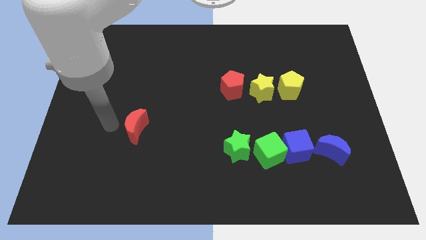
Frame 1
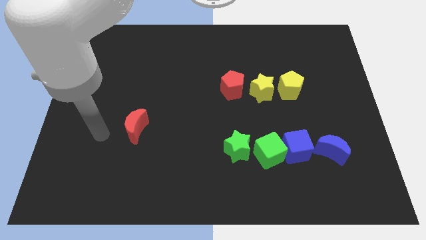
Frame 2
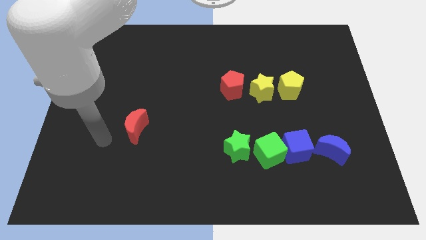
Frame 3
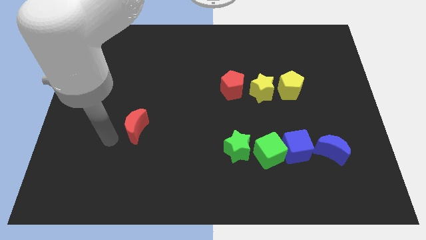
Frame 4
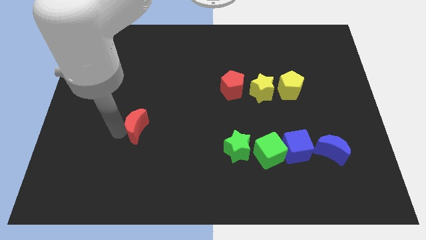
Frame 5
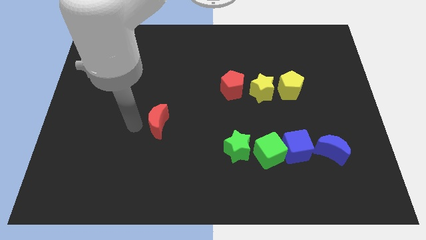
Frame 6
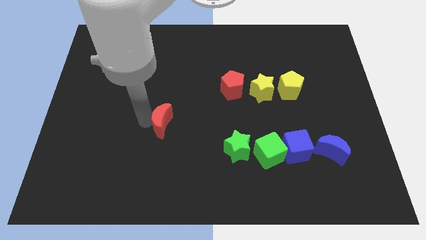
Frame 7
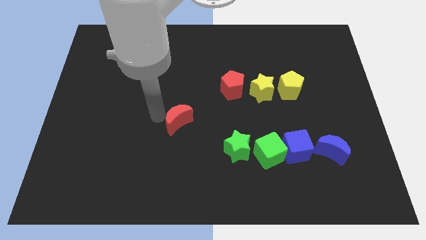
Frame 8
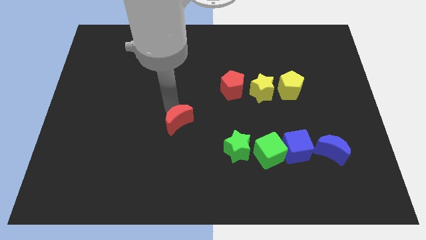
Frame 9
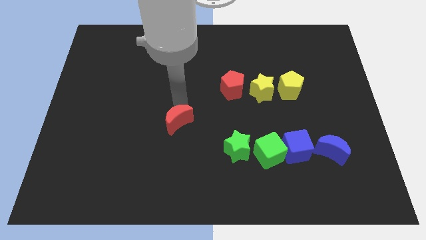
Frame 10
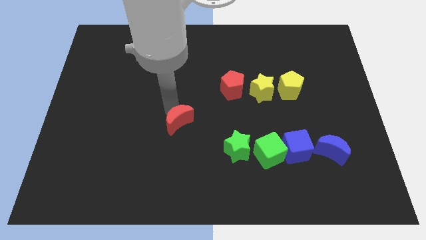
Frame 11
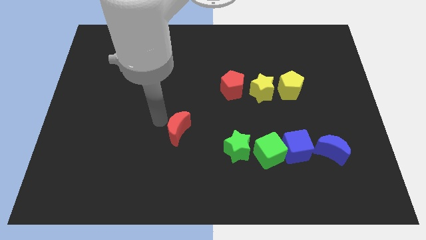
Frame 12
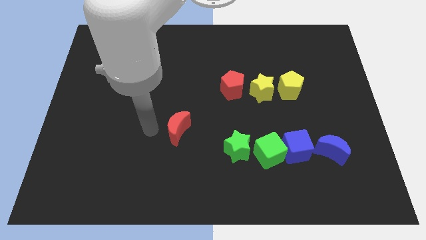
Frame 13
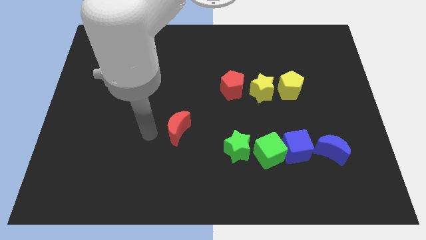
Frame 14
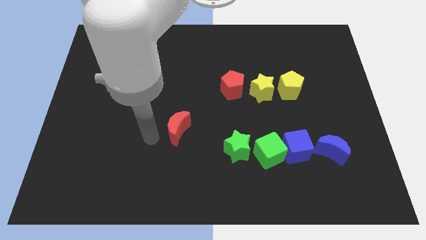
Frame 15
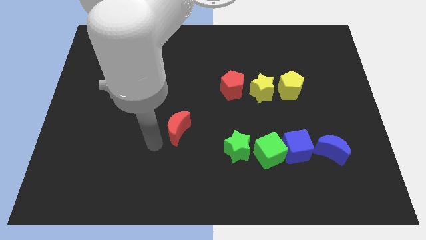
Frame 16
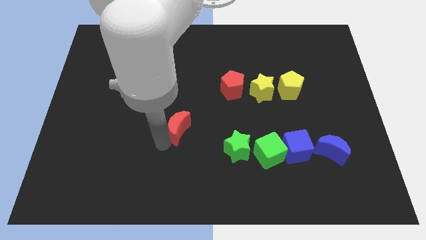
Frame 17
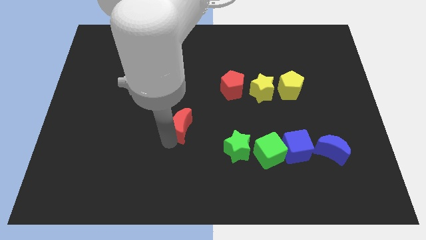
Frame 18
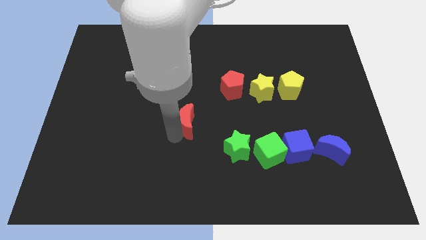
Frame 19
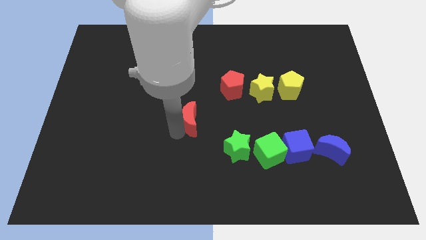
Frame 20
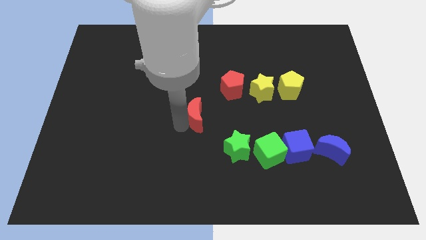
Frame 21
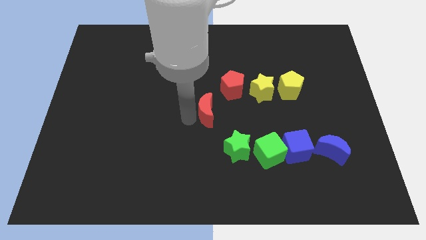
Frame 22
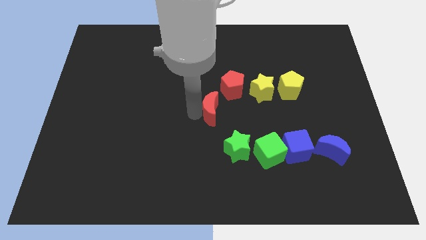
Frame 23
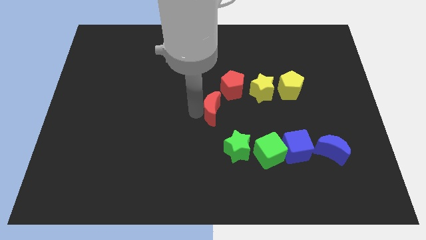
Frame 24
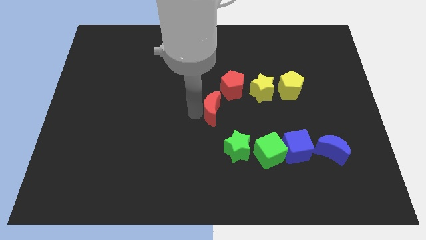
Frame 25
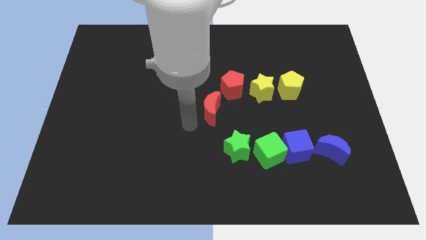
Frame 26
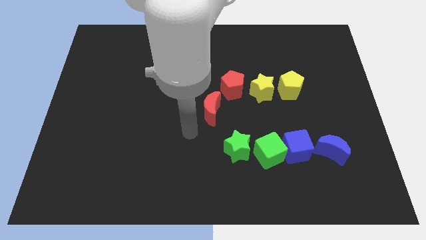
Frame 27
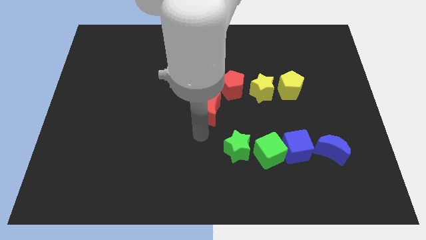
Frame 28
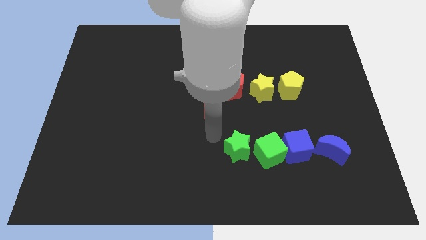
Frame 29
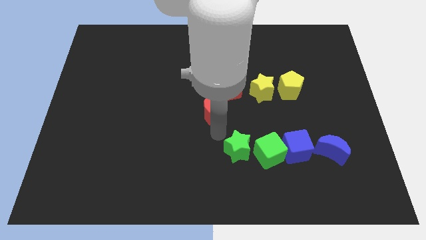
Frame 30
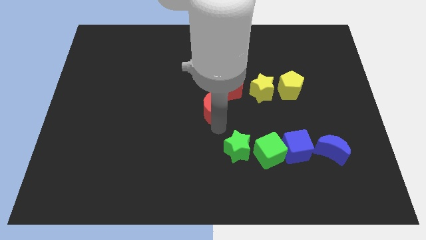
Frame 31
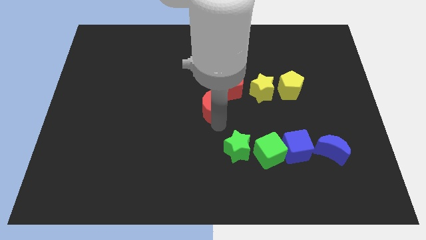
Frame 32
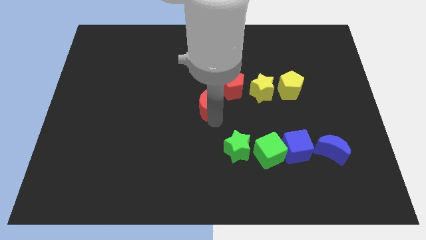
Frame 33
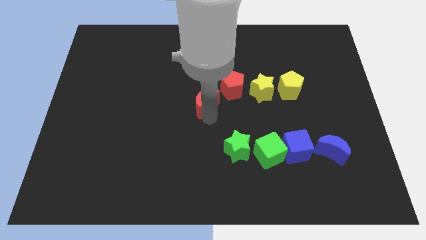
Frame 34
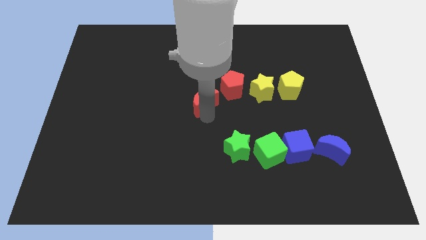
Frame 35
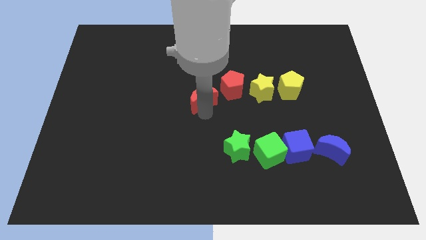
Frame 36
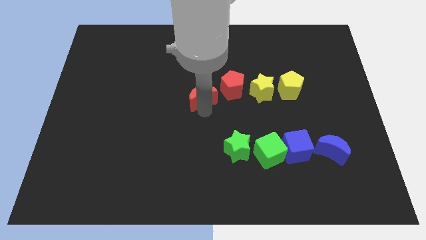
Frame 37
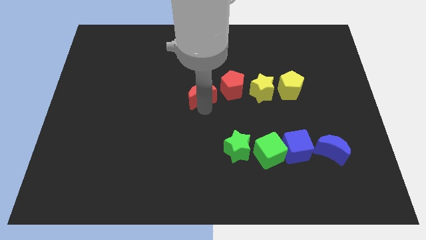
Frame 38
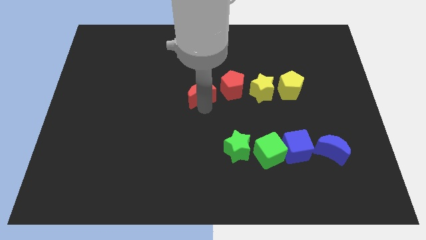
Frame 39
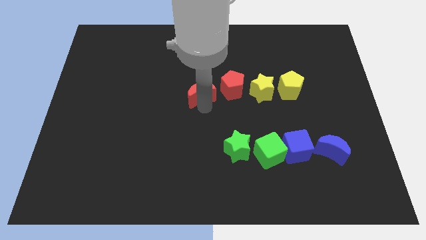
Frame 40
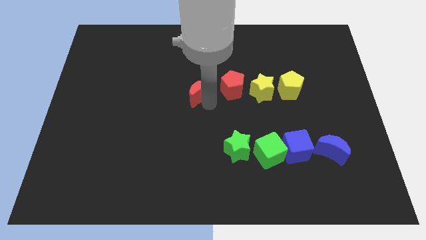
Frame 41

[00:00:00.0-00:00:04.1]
put the red moon parallel left to the red pentagon

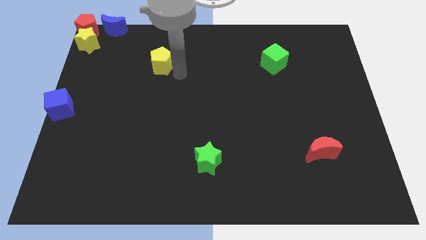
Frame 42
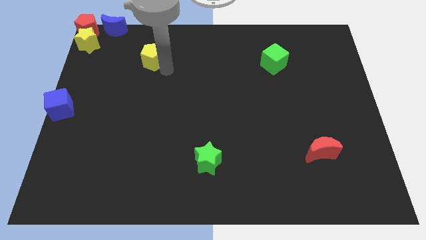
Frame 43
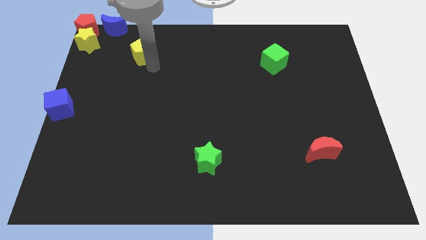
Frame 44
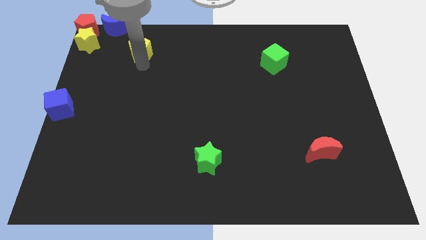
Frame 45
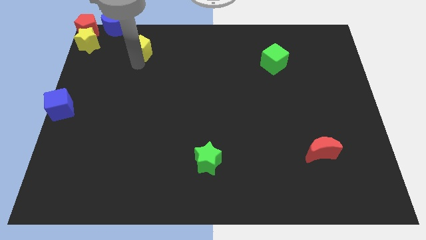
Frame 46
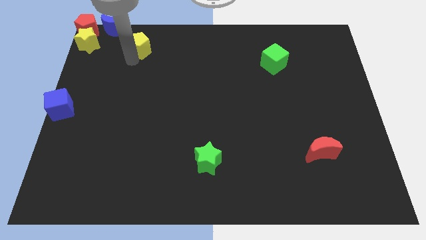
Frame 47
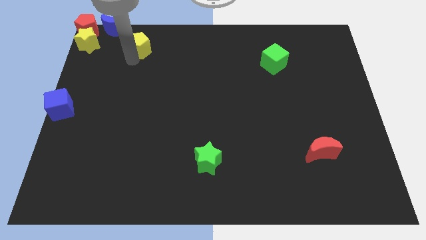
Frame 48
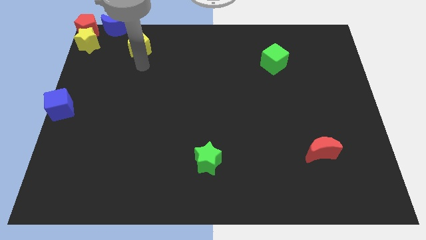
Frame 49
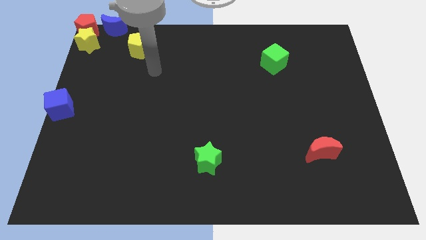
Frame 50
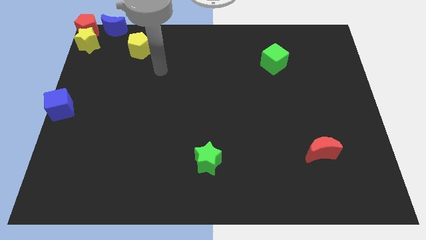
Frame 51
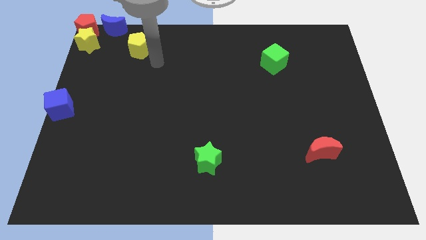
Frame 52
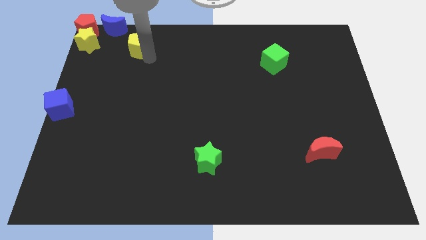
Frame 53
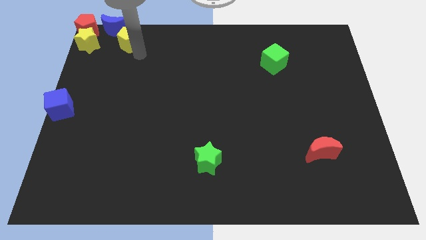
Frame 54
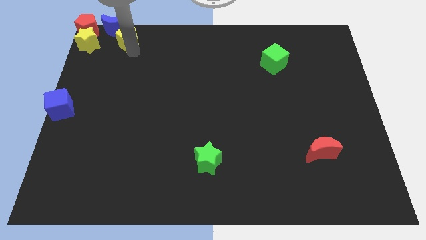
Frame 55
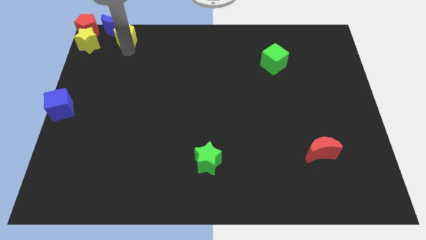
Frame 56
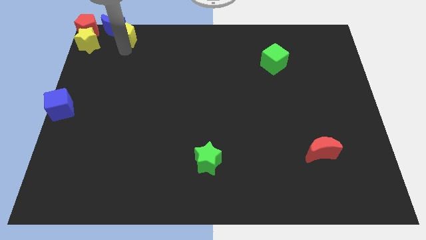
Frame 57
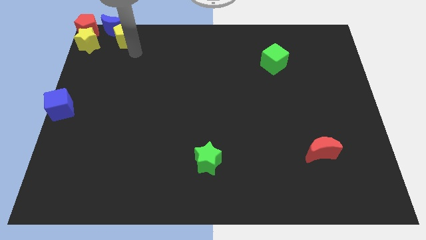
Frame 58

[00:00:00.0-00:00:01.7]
place the yellow pentagon towards the bottom of the blue crescent

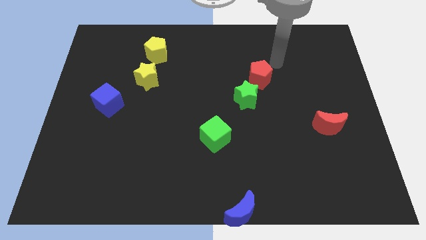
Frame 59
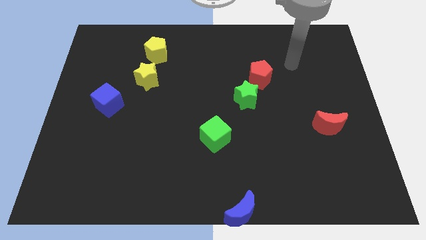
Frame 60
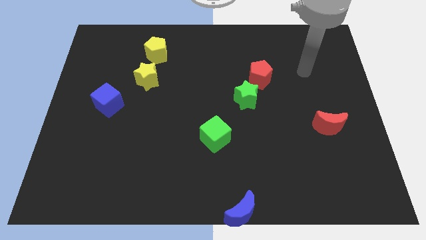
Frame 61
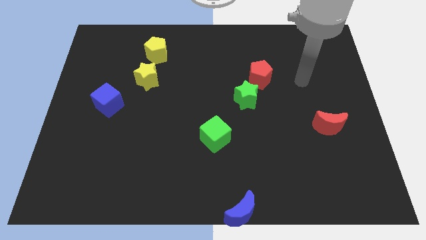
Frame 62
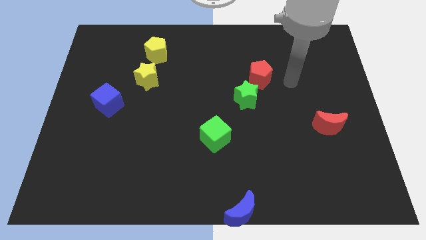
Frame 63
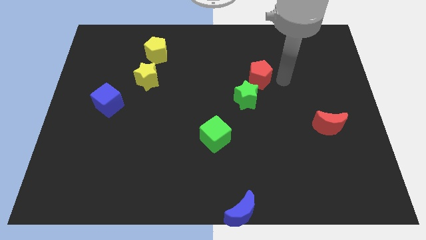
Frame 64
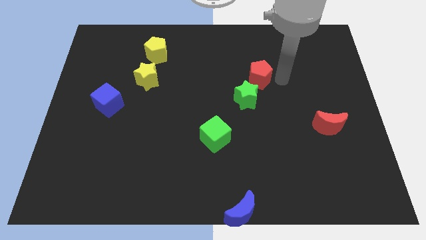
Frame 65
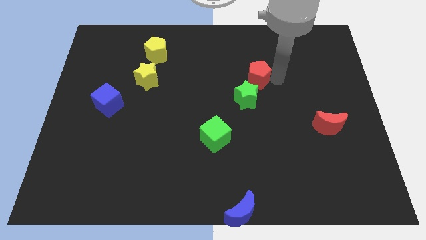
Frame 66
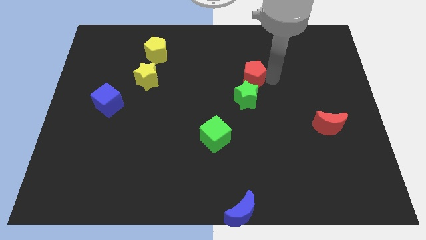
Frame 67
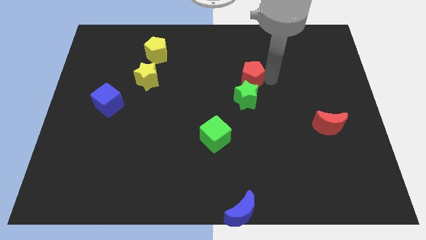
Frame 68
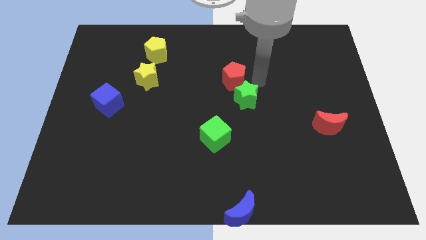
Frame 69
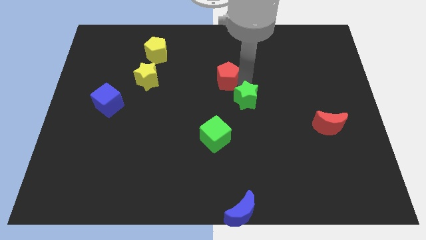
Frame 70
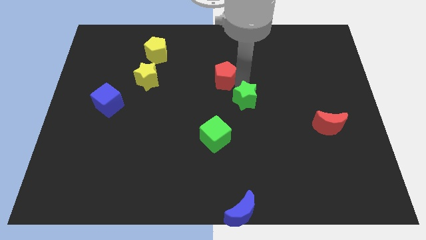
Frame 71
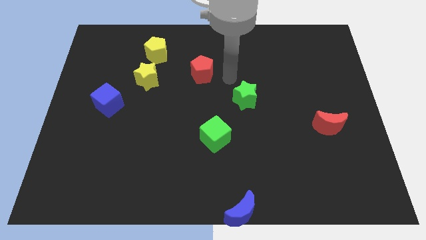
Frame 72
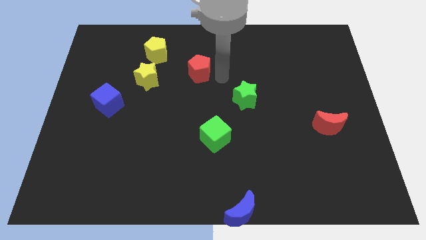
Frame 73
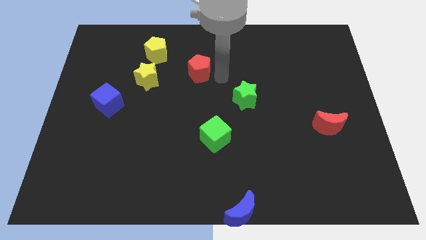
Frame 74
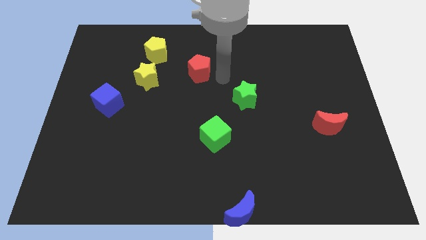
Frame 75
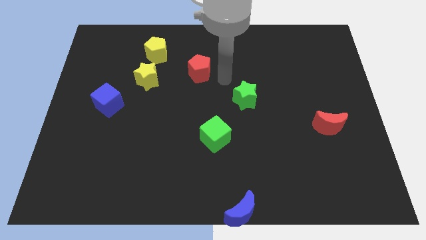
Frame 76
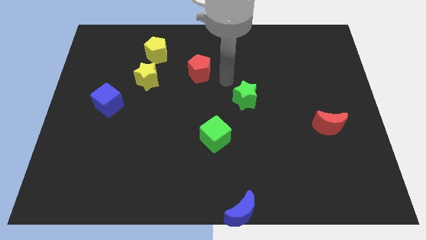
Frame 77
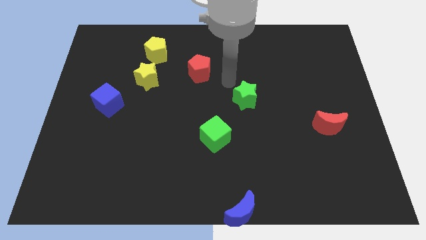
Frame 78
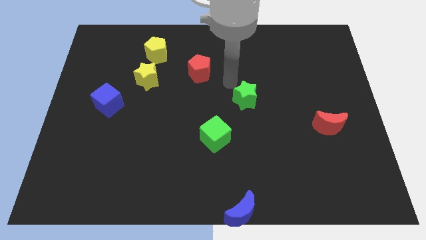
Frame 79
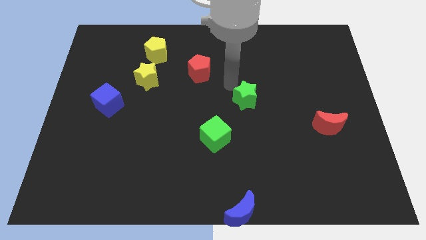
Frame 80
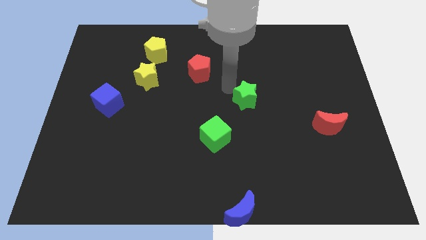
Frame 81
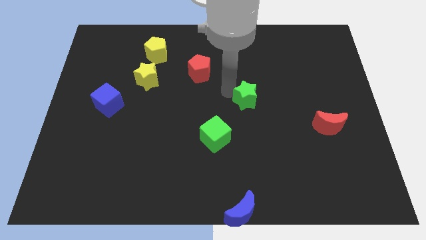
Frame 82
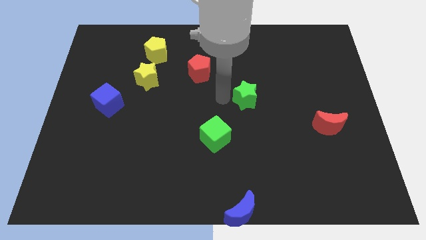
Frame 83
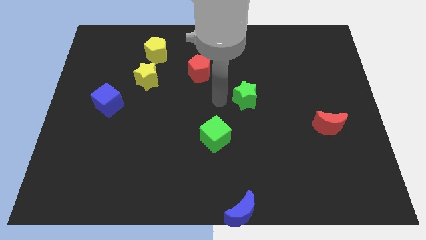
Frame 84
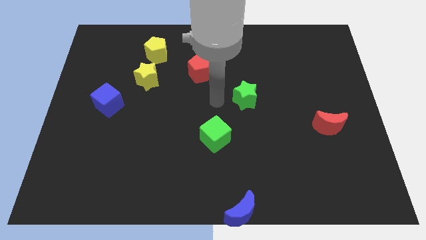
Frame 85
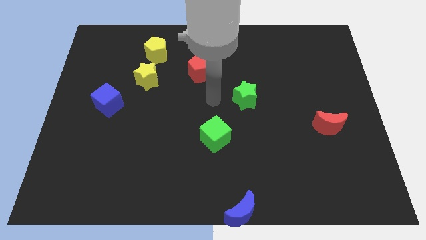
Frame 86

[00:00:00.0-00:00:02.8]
push the red pentagon to the right of the yellow blocks

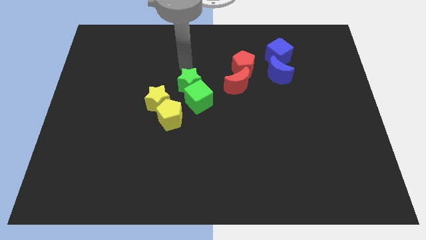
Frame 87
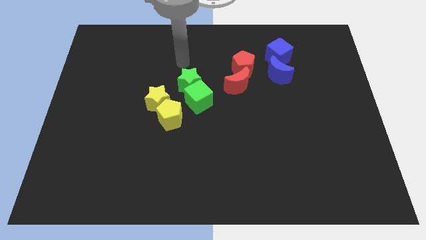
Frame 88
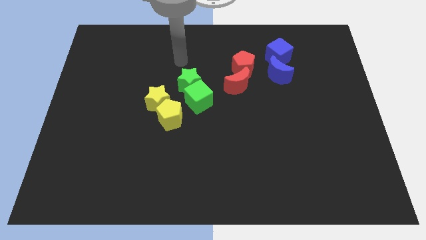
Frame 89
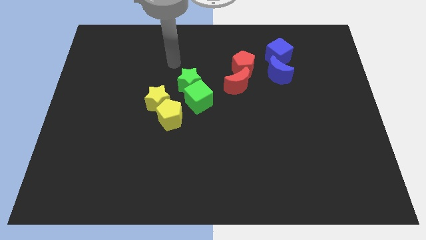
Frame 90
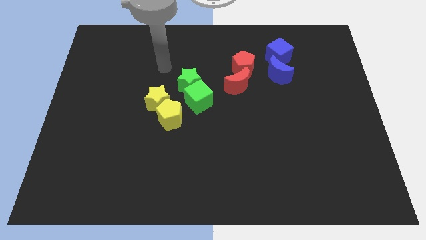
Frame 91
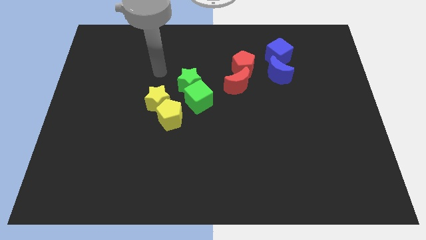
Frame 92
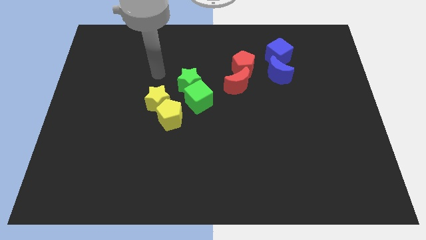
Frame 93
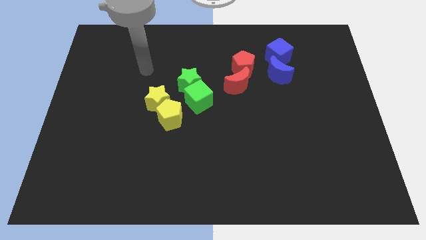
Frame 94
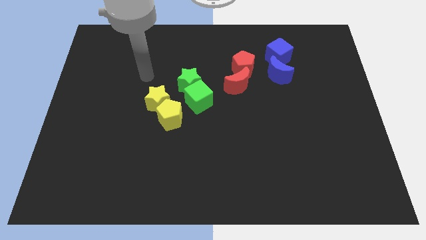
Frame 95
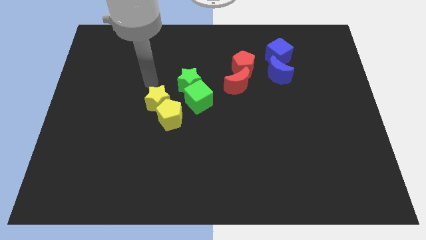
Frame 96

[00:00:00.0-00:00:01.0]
point your arm at the top of the yellow star
